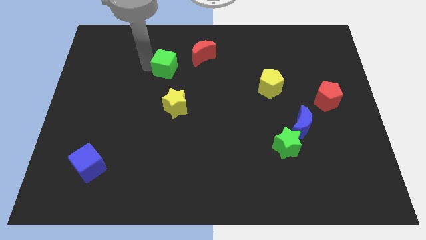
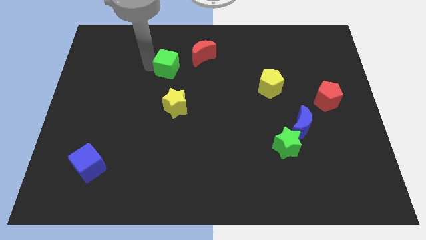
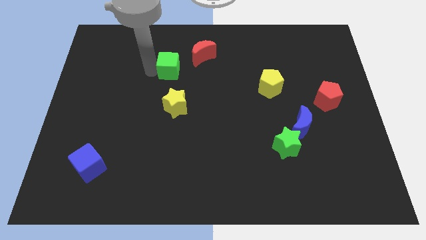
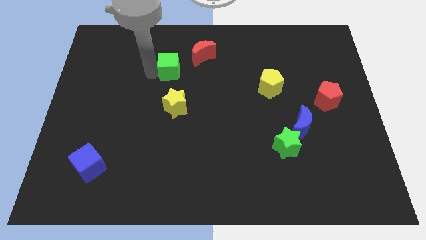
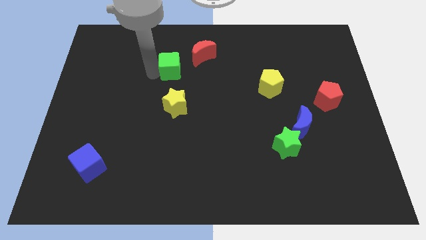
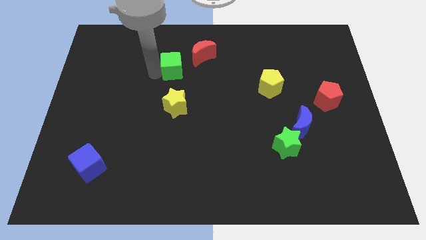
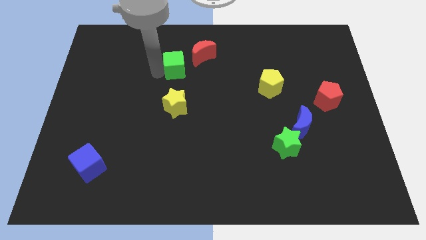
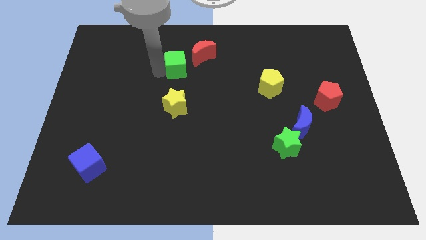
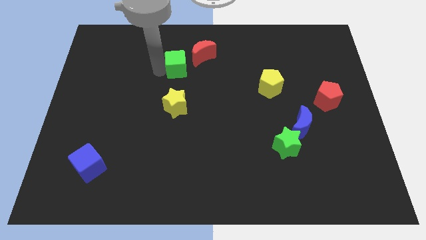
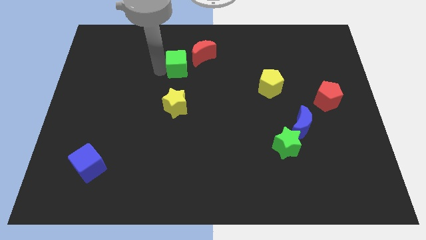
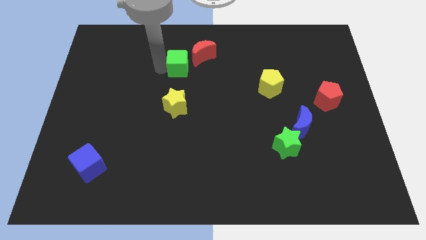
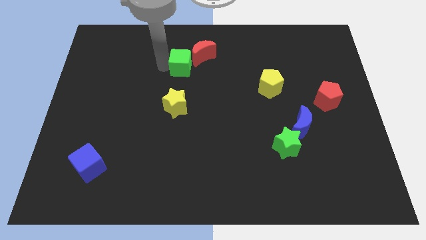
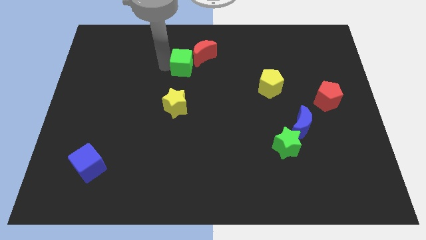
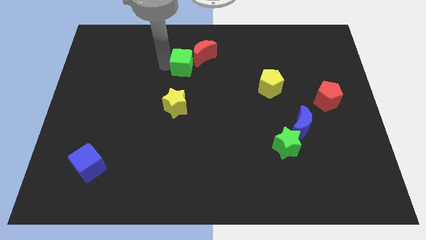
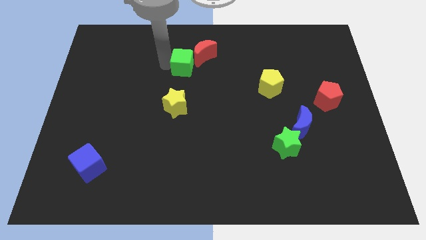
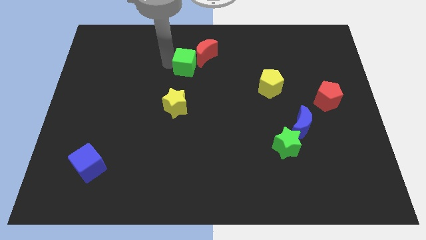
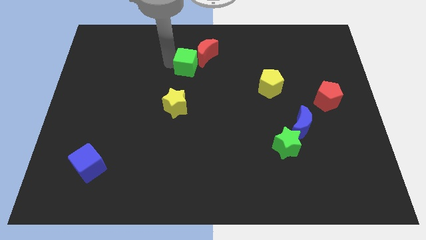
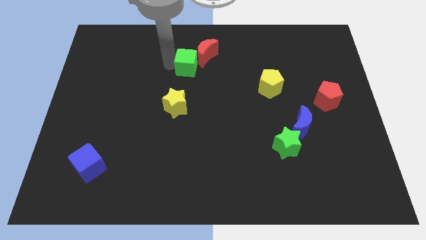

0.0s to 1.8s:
move green cube into the red moon

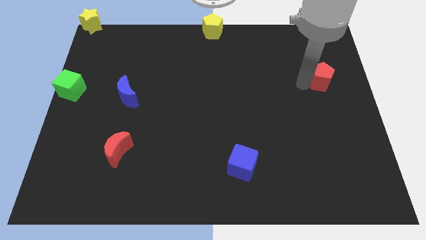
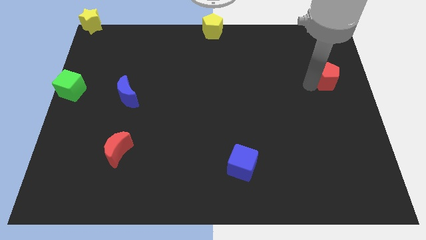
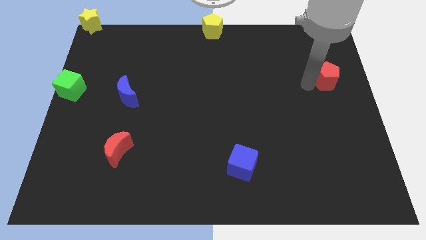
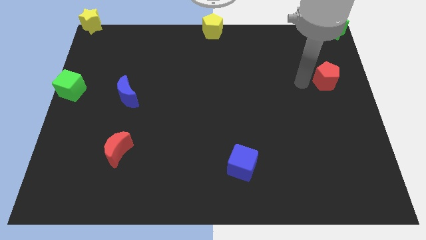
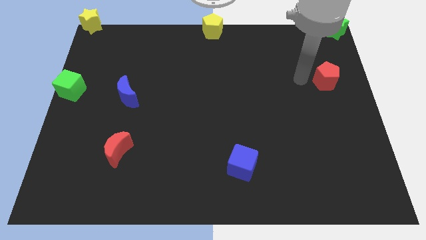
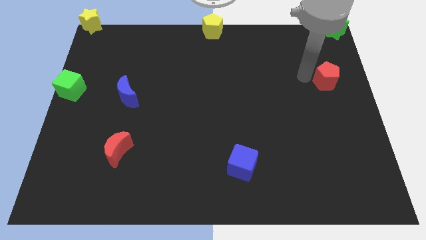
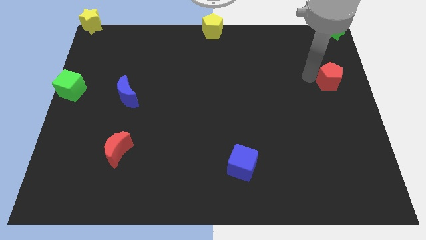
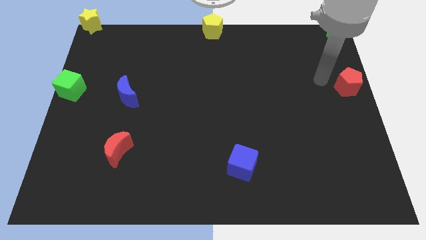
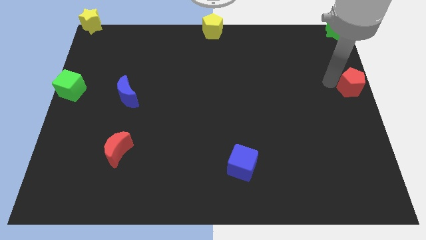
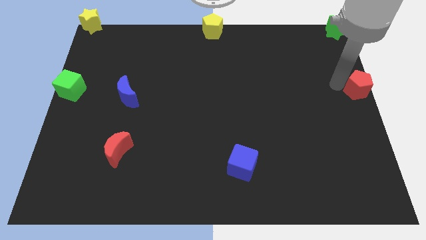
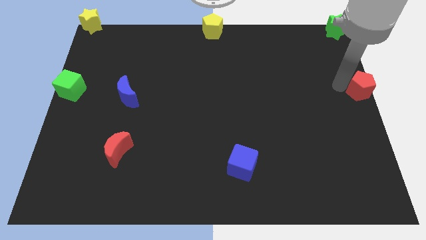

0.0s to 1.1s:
push red pentagon to the center right

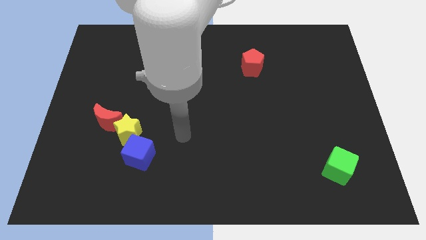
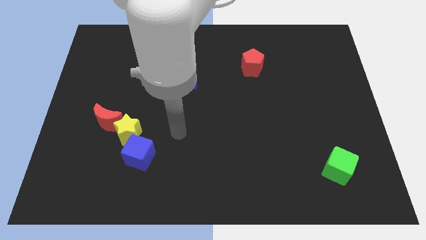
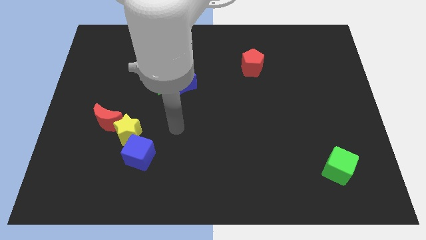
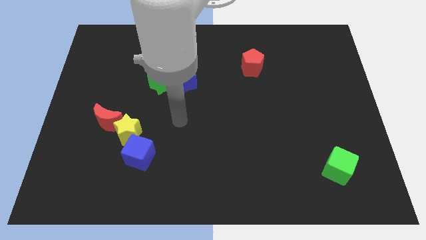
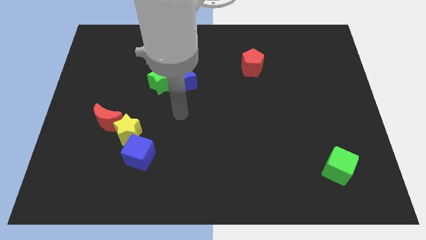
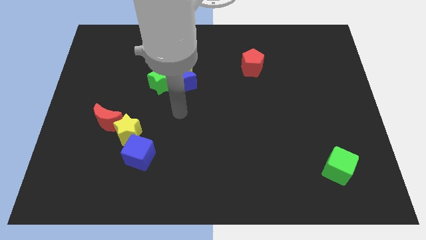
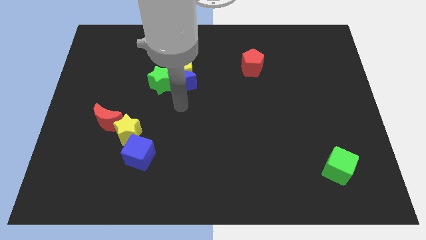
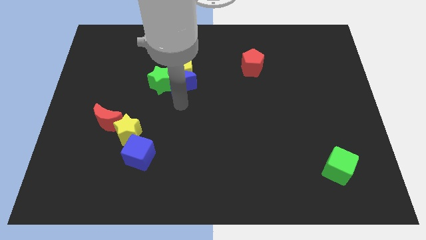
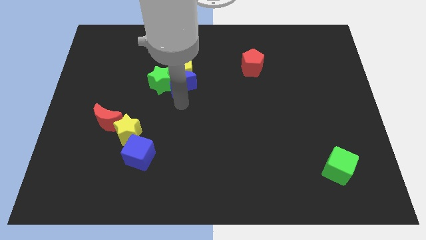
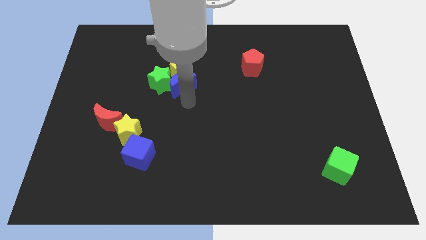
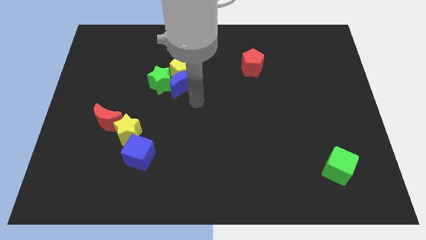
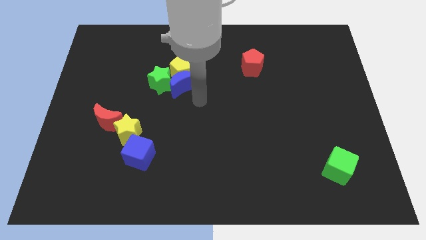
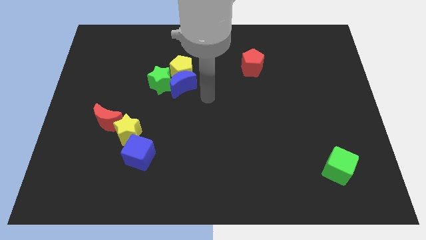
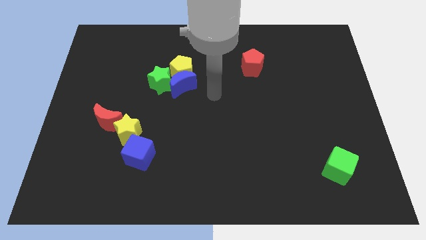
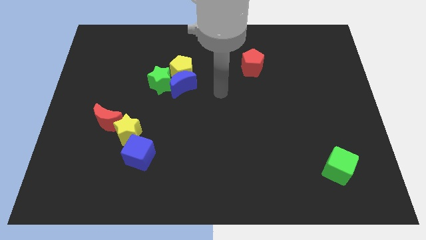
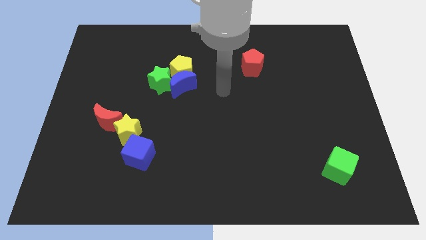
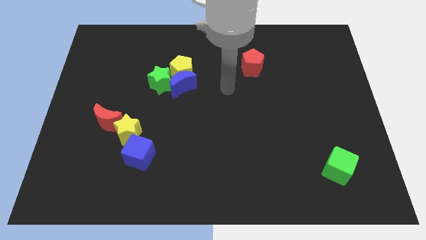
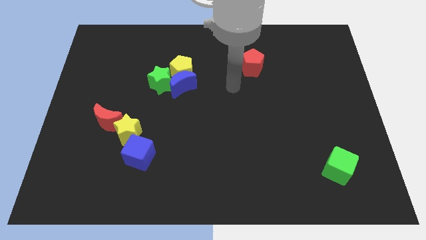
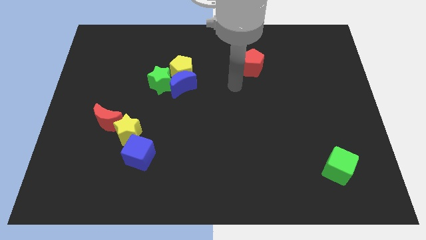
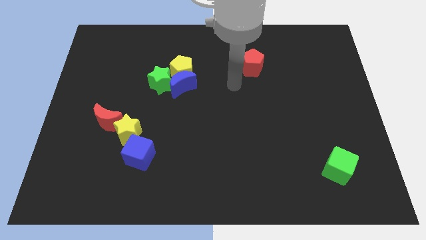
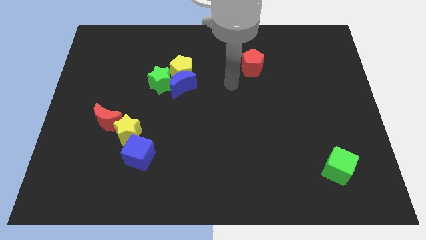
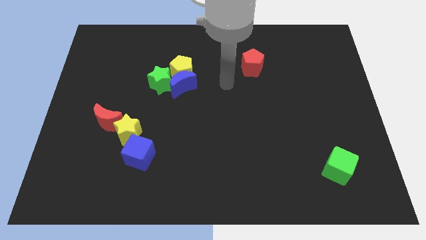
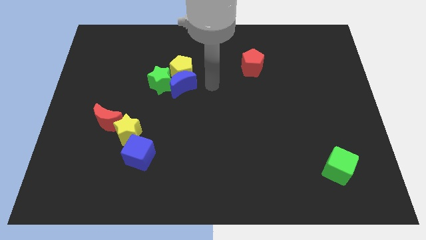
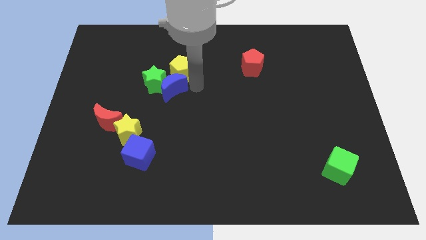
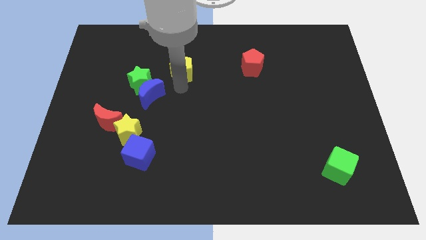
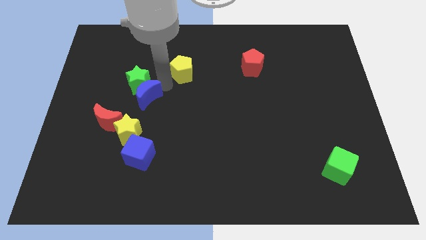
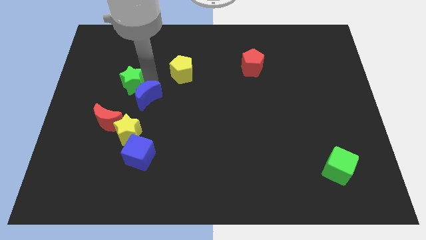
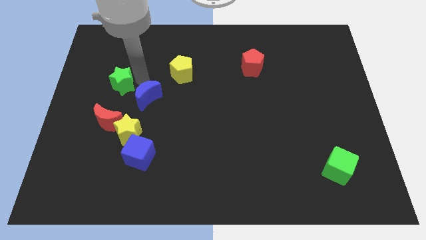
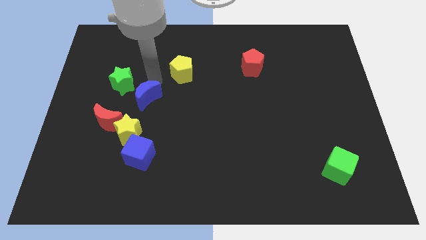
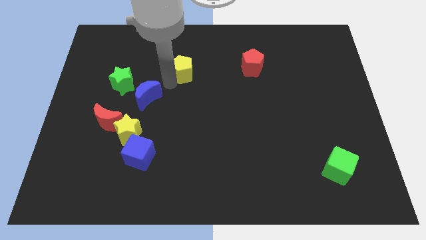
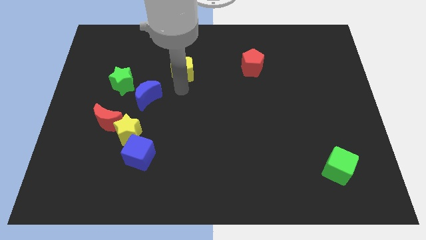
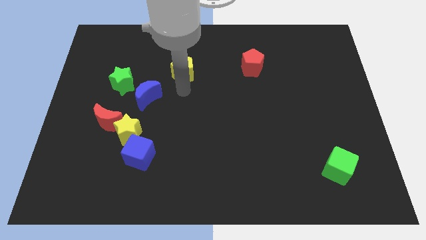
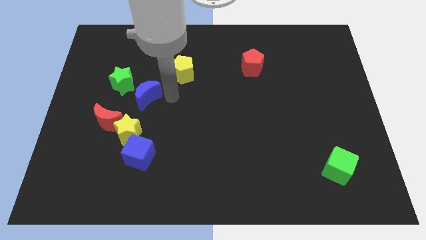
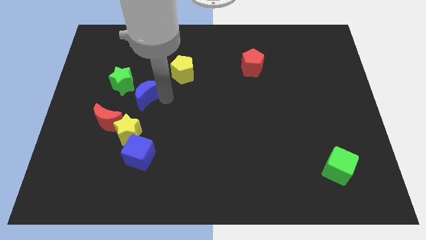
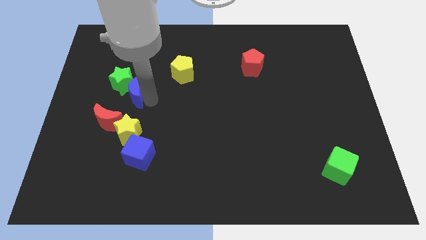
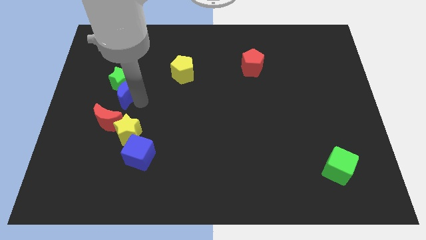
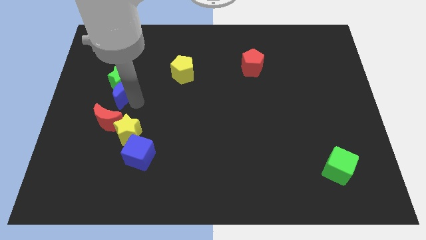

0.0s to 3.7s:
push the green star and the blue moon to the left

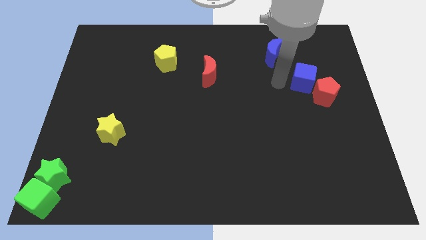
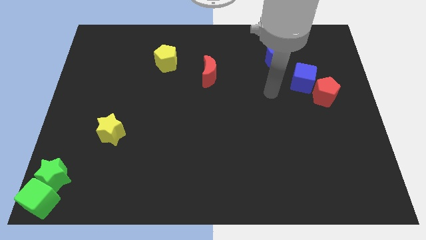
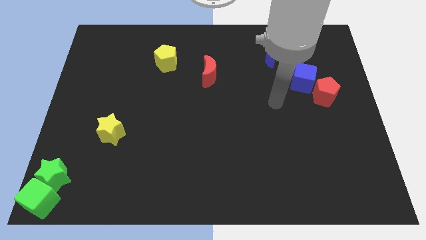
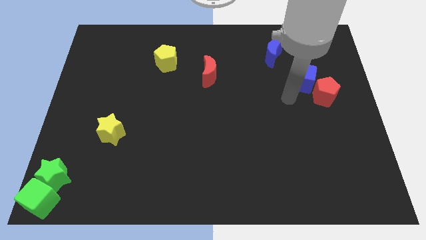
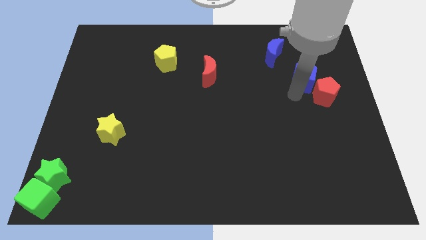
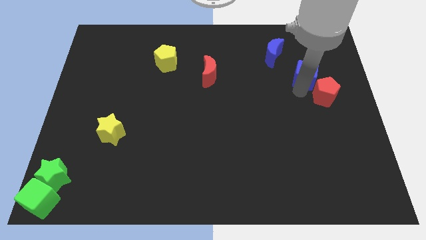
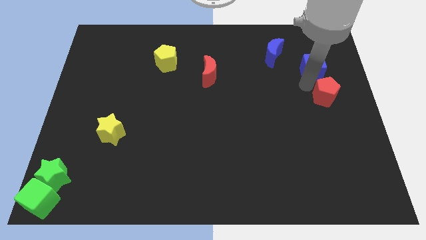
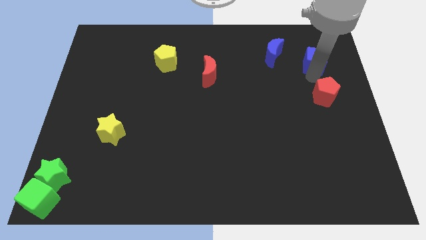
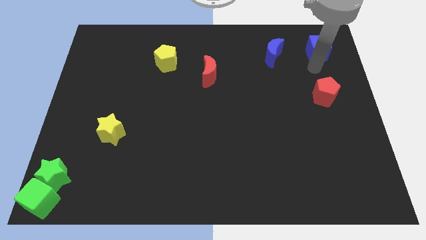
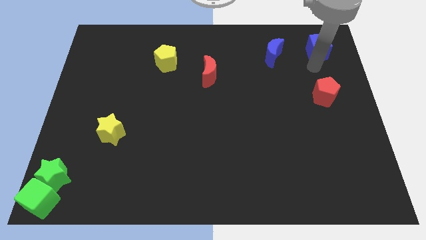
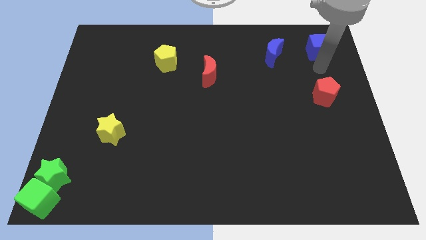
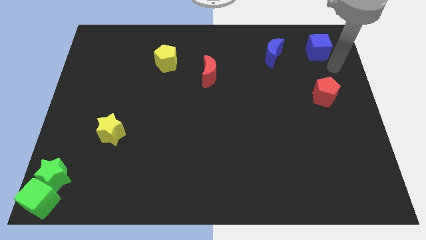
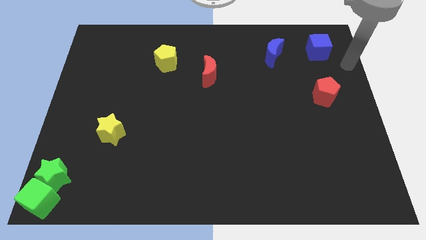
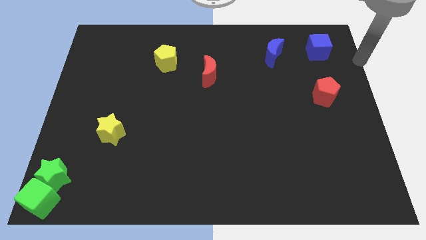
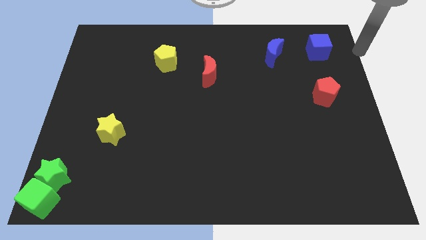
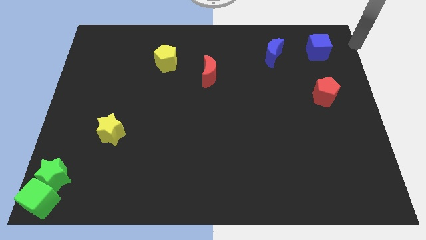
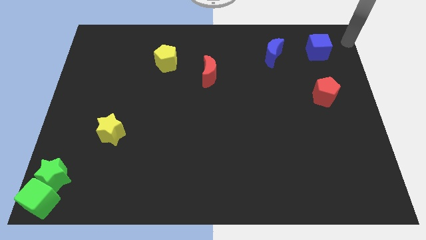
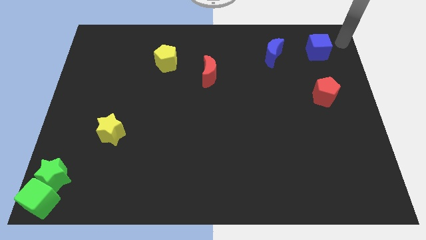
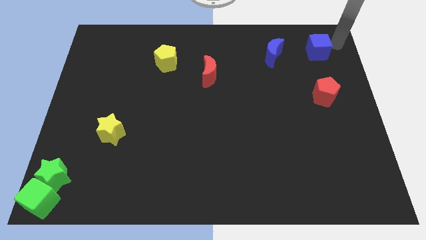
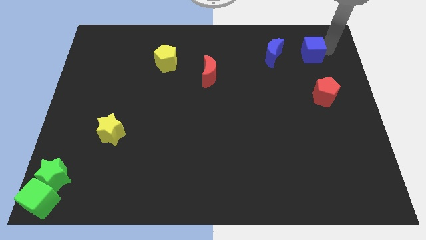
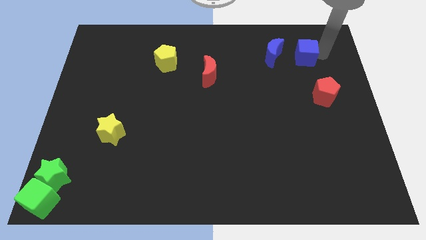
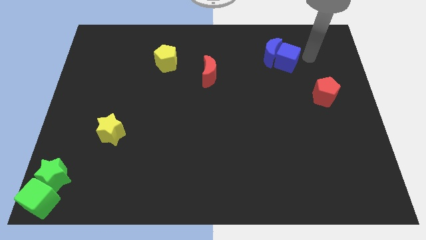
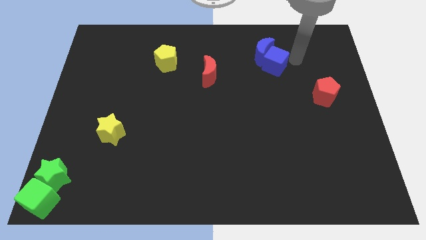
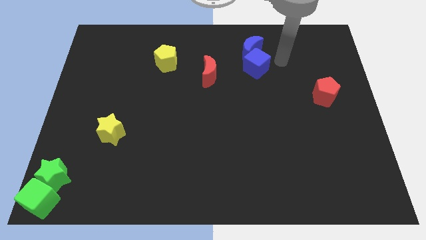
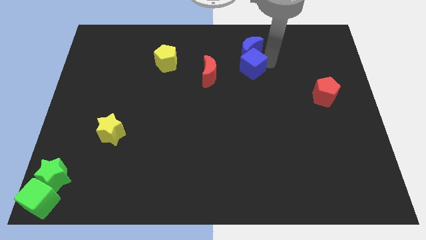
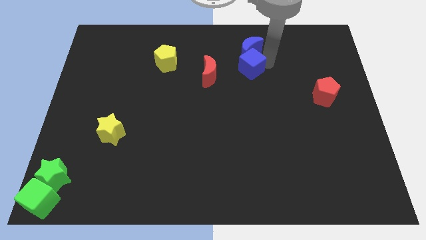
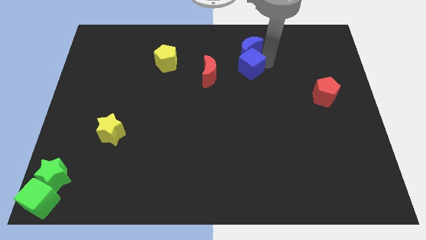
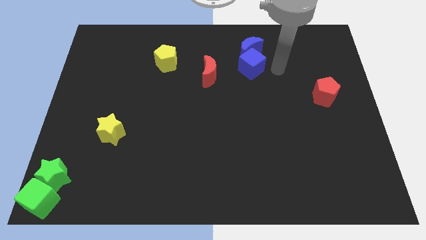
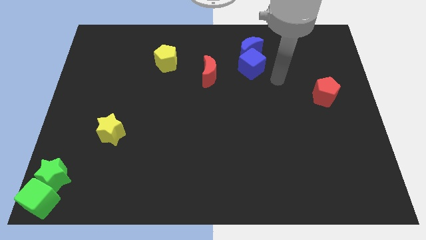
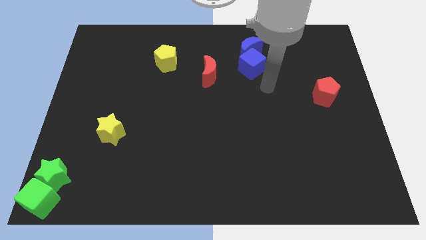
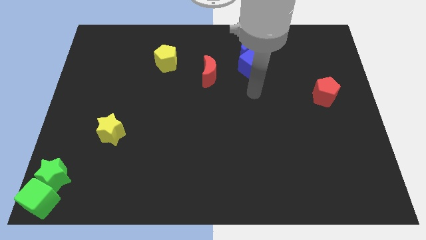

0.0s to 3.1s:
push the blue cube to the bottom of the blue crescent
